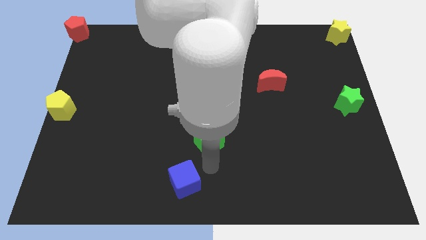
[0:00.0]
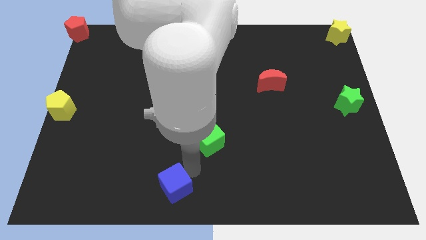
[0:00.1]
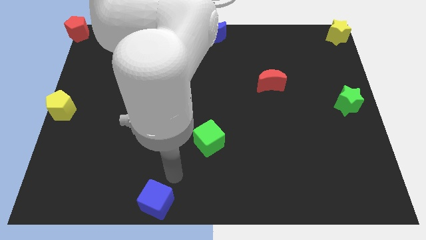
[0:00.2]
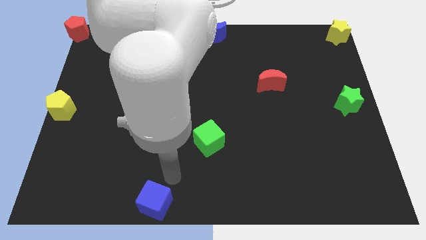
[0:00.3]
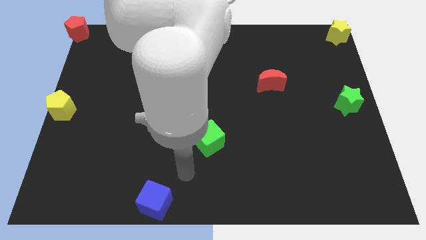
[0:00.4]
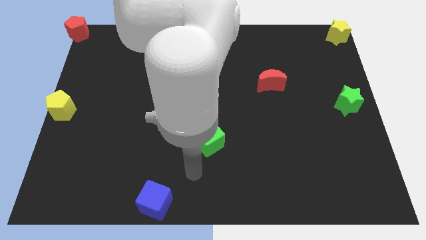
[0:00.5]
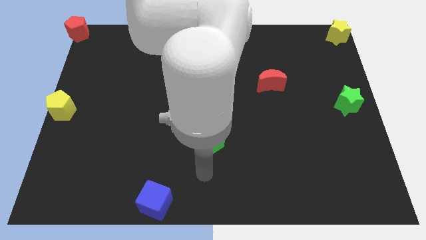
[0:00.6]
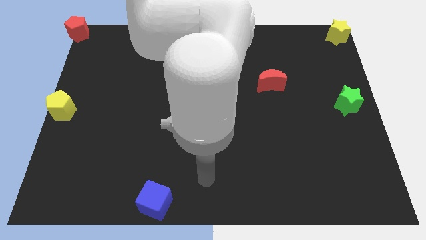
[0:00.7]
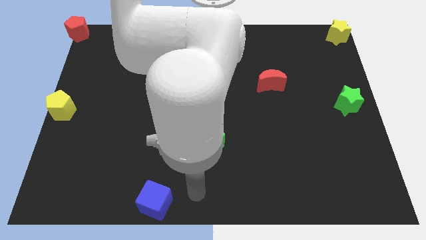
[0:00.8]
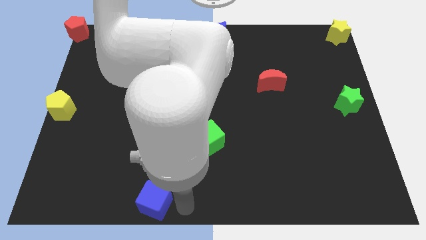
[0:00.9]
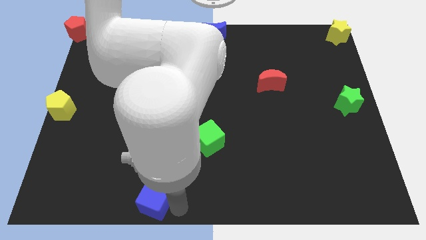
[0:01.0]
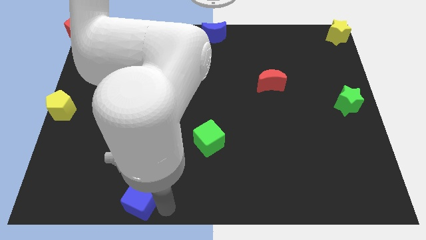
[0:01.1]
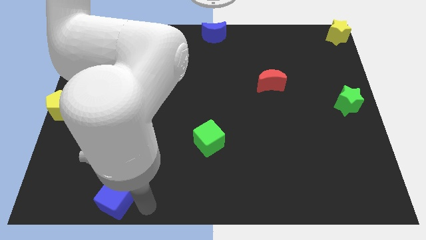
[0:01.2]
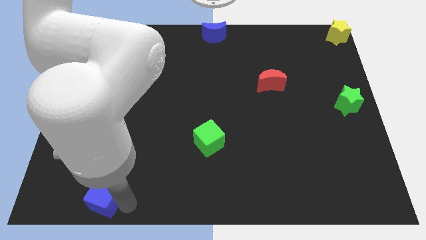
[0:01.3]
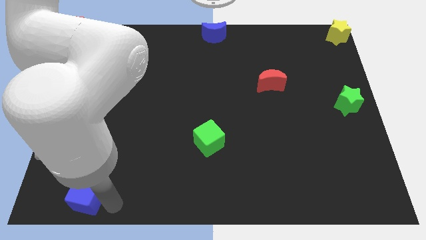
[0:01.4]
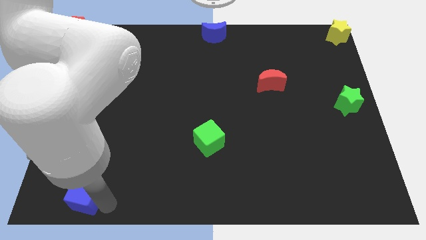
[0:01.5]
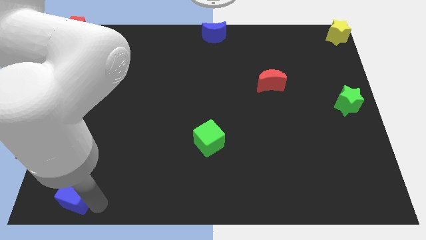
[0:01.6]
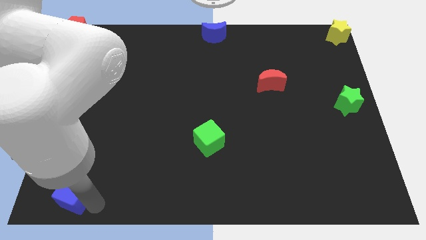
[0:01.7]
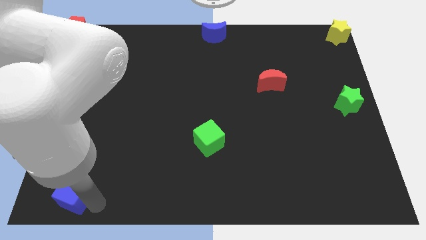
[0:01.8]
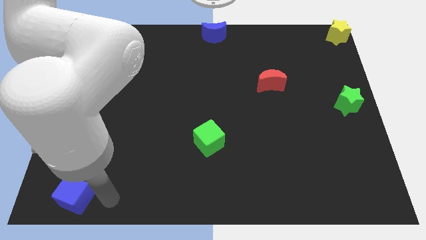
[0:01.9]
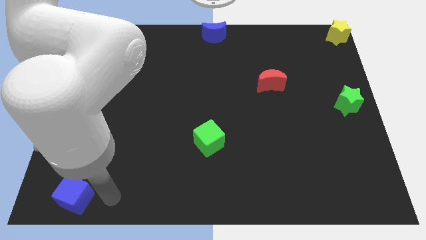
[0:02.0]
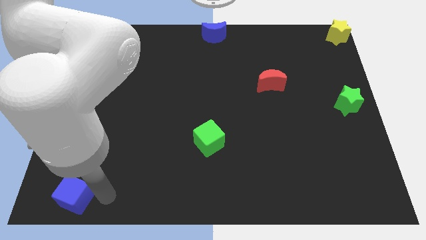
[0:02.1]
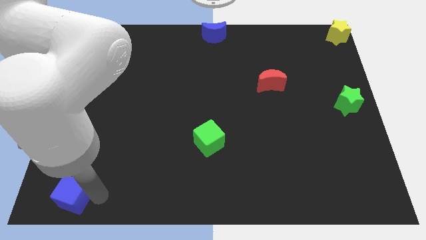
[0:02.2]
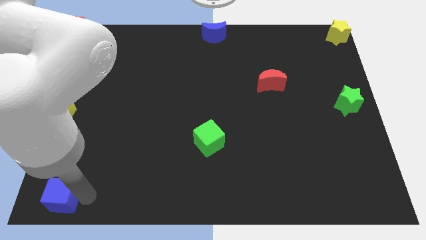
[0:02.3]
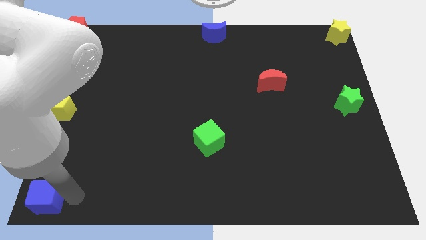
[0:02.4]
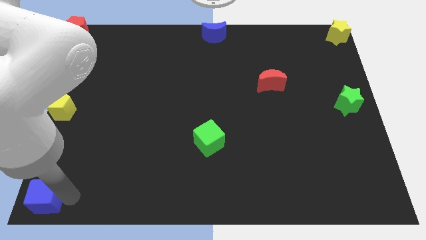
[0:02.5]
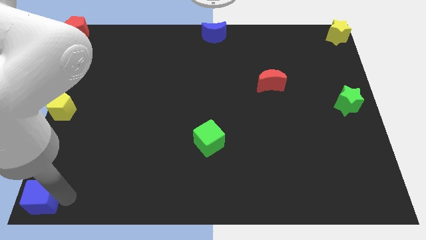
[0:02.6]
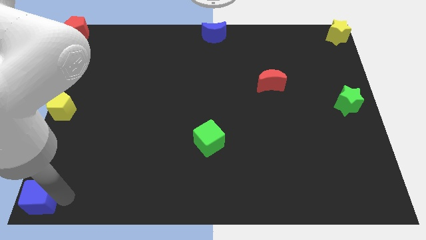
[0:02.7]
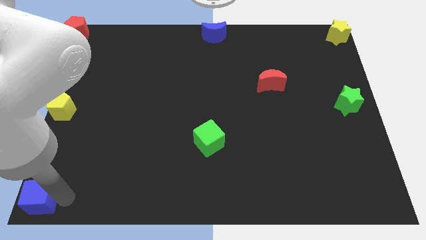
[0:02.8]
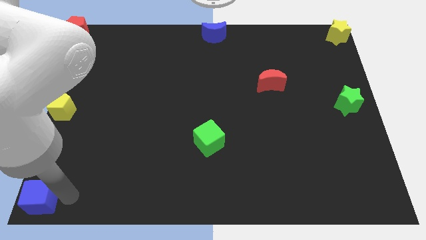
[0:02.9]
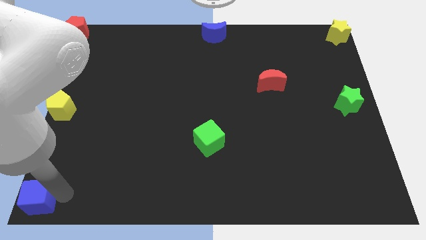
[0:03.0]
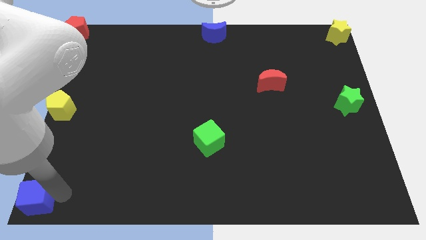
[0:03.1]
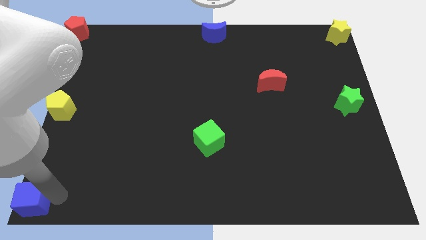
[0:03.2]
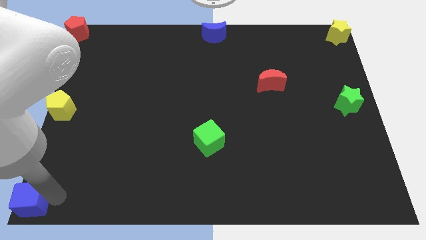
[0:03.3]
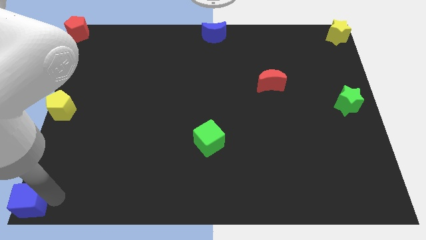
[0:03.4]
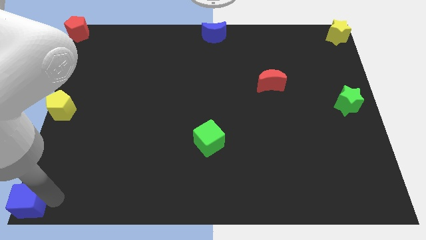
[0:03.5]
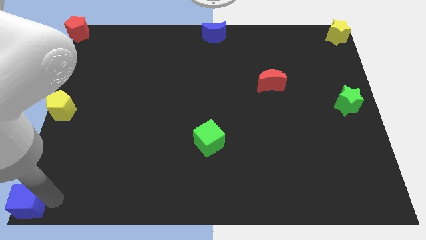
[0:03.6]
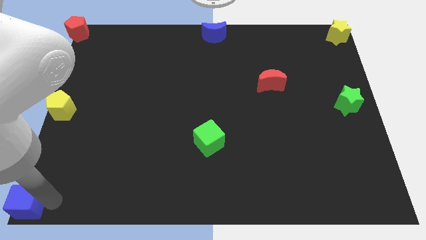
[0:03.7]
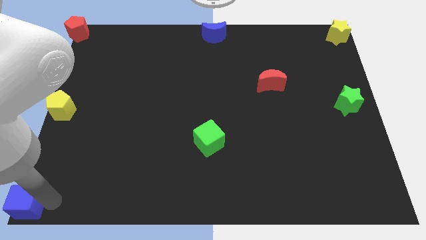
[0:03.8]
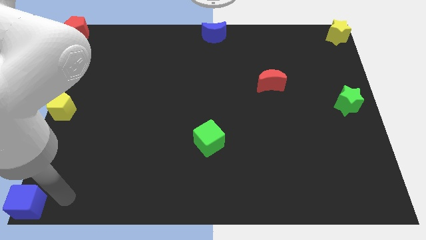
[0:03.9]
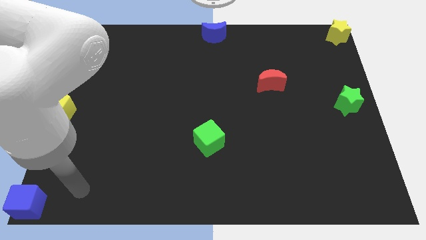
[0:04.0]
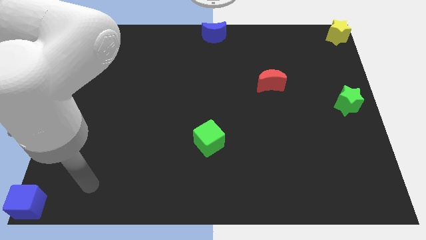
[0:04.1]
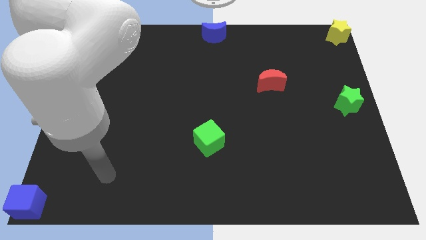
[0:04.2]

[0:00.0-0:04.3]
move blue cube to bottom left corner of the board

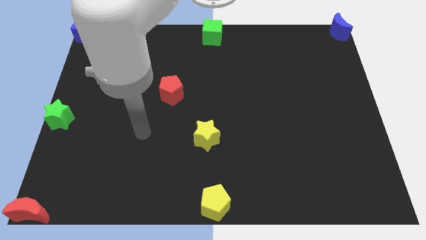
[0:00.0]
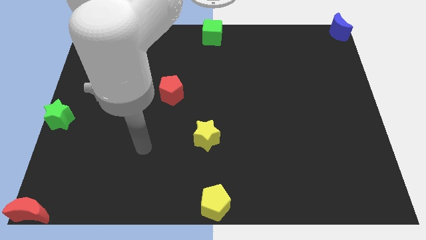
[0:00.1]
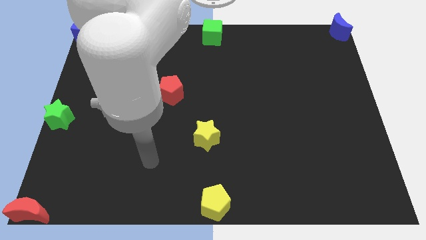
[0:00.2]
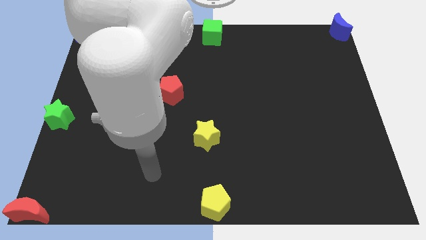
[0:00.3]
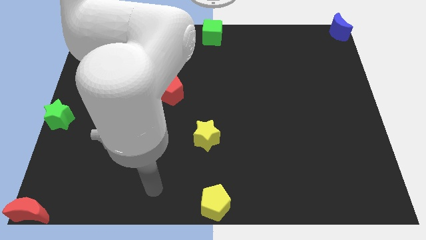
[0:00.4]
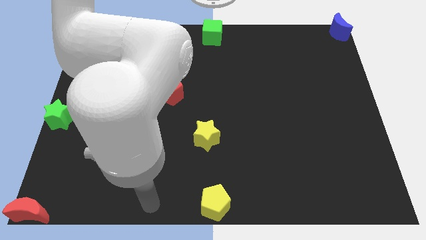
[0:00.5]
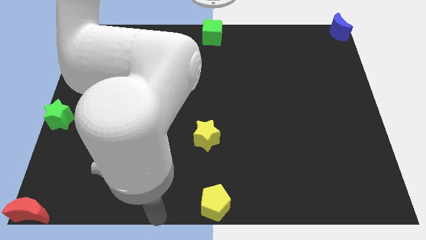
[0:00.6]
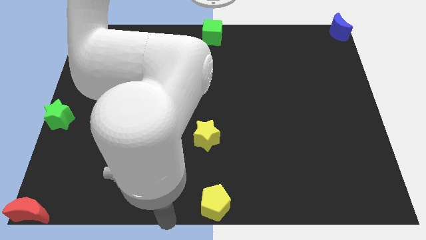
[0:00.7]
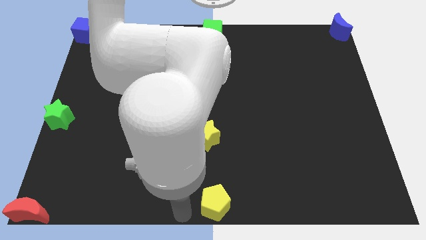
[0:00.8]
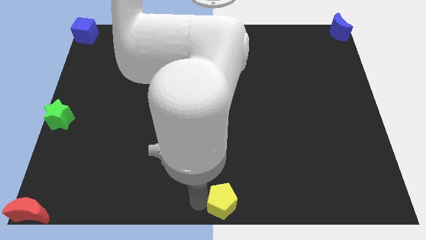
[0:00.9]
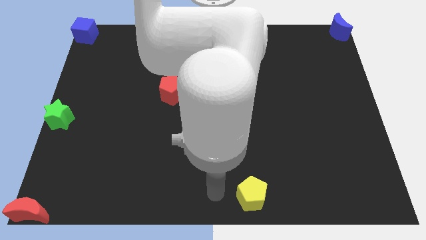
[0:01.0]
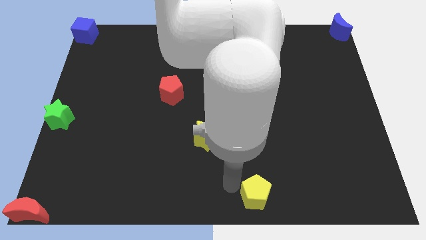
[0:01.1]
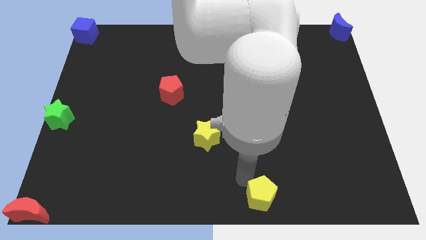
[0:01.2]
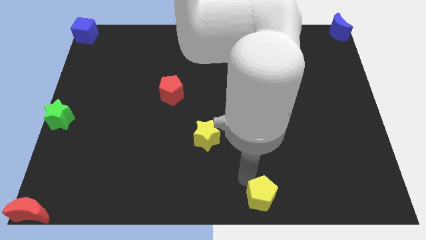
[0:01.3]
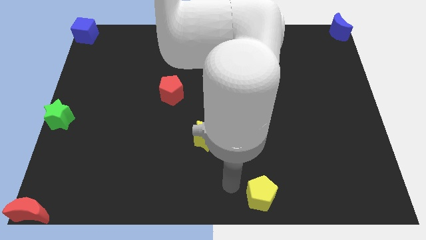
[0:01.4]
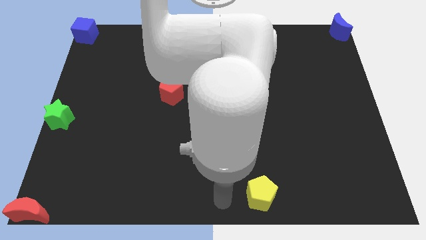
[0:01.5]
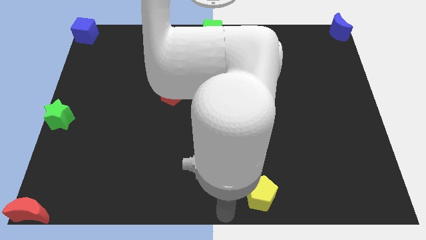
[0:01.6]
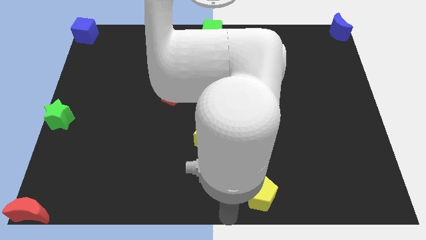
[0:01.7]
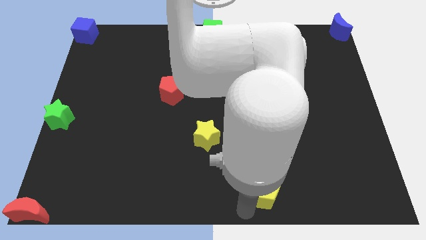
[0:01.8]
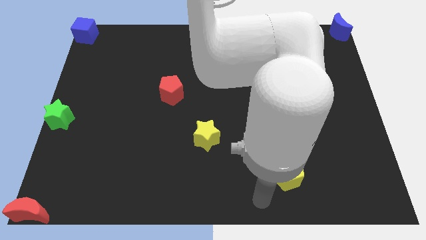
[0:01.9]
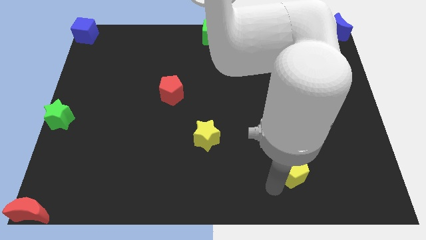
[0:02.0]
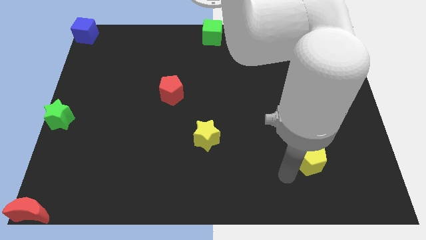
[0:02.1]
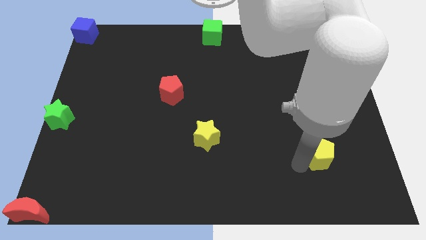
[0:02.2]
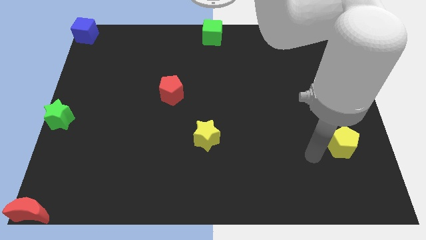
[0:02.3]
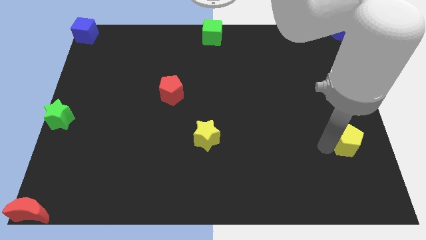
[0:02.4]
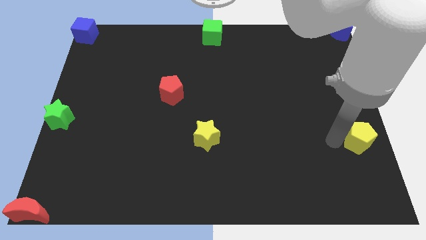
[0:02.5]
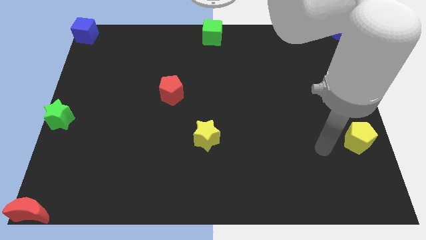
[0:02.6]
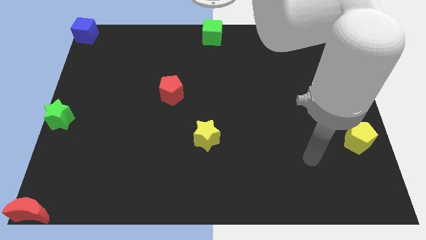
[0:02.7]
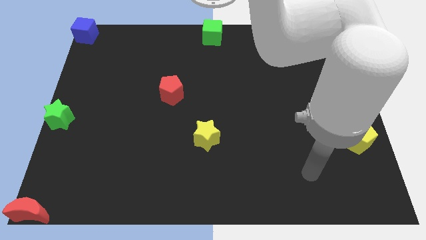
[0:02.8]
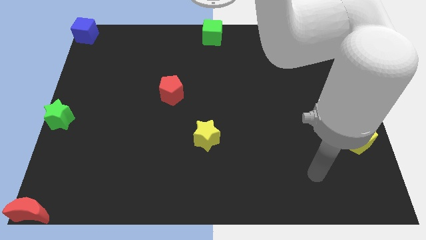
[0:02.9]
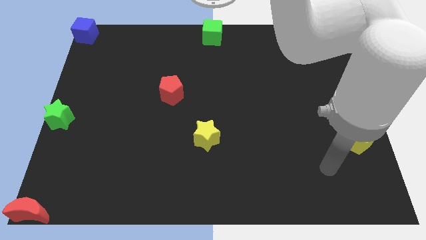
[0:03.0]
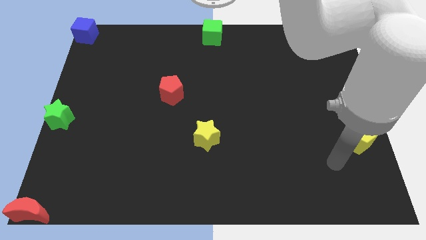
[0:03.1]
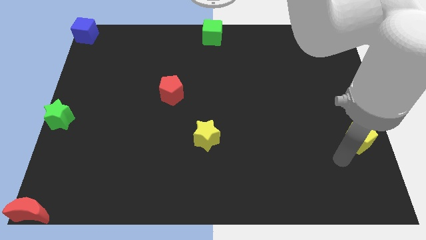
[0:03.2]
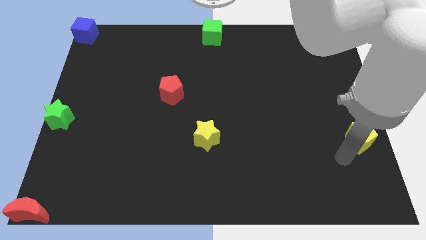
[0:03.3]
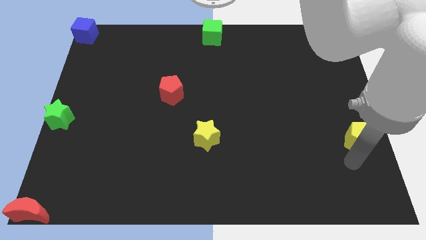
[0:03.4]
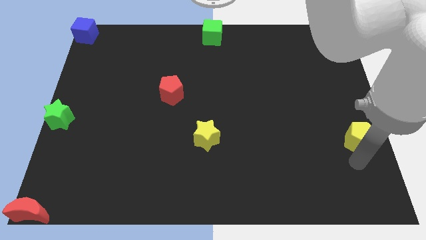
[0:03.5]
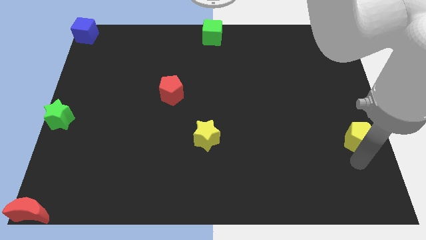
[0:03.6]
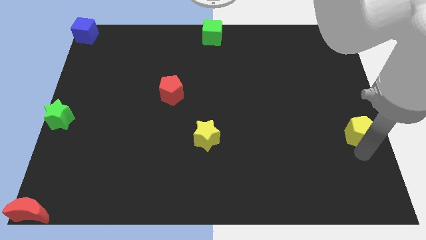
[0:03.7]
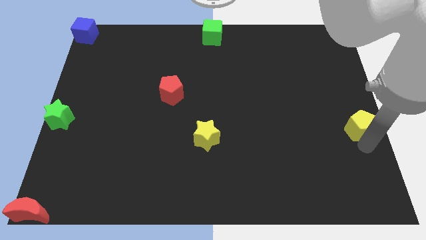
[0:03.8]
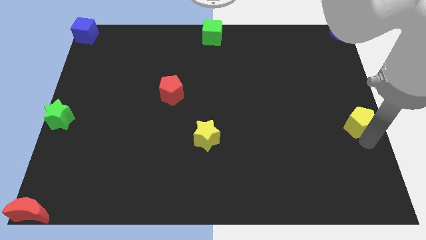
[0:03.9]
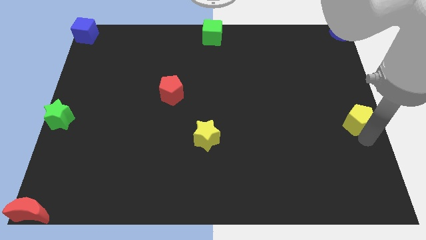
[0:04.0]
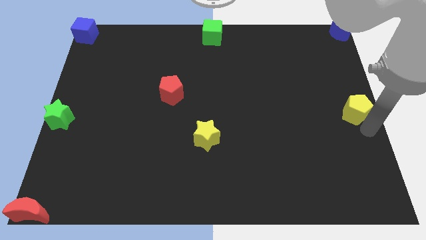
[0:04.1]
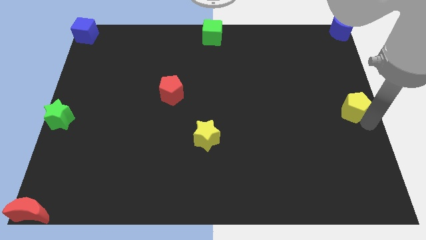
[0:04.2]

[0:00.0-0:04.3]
push the yellow pentagon to the right center

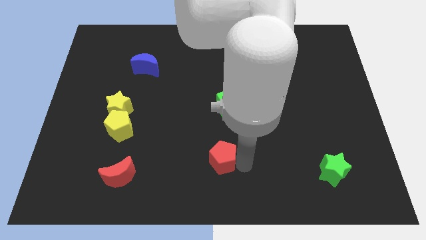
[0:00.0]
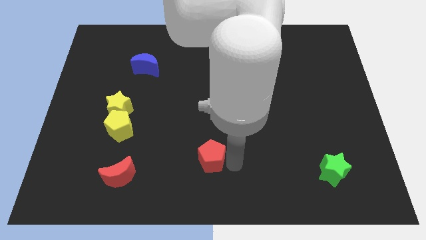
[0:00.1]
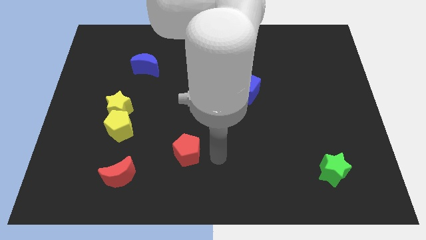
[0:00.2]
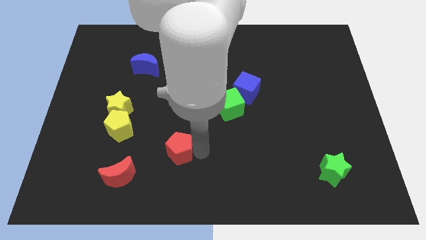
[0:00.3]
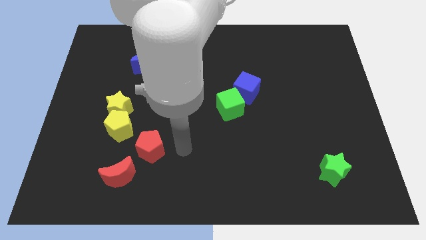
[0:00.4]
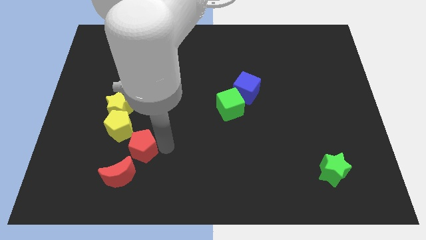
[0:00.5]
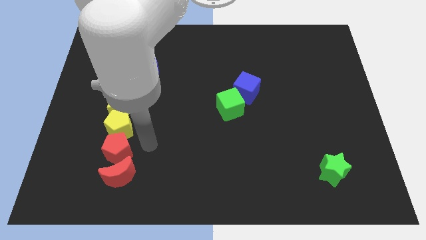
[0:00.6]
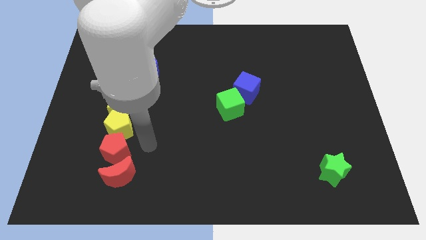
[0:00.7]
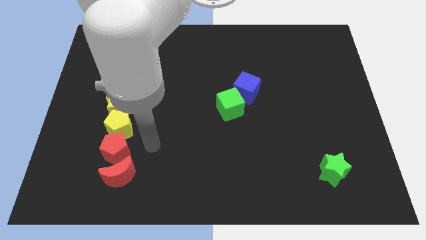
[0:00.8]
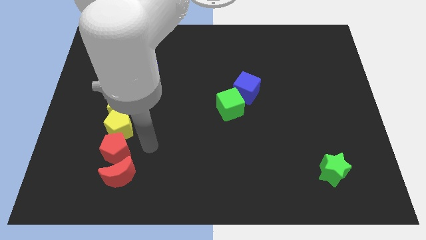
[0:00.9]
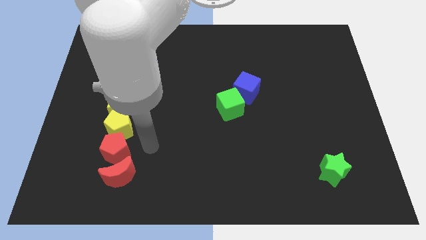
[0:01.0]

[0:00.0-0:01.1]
place the red pentagon vertically above the red moon
